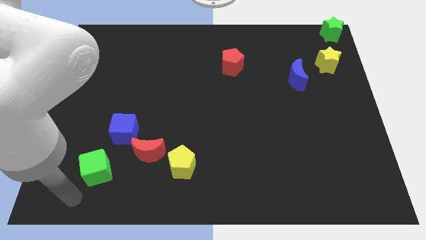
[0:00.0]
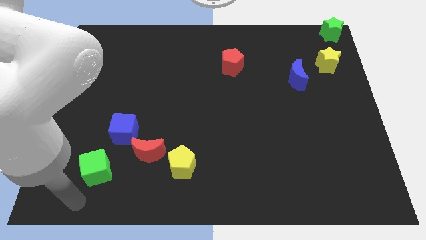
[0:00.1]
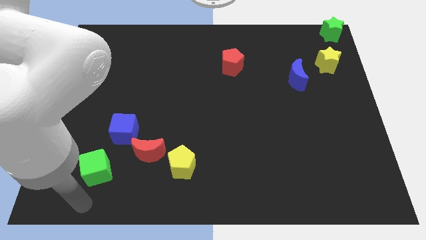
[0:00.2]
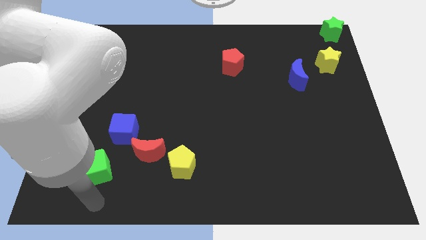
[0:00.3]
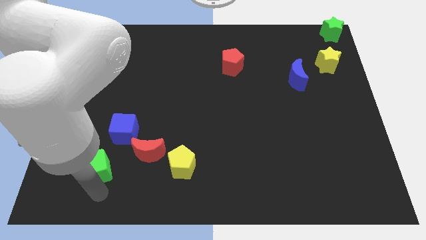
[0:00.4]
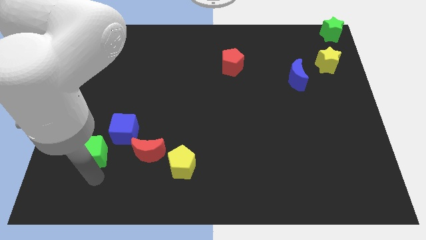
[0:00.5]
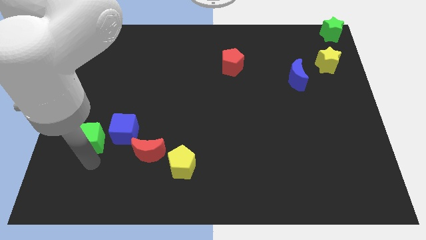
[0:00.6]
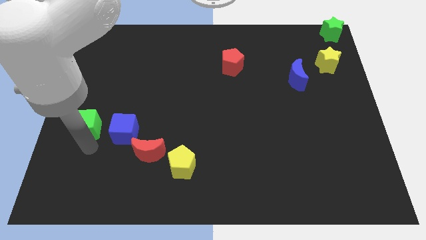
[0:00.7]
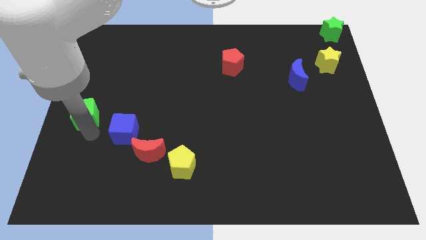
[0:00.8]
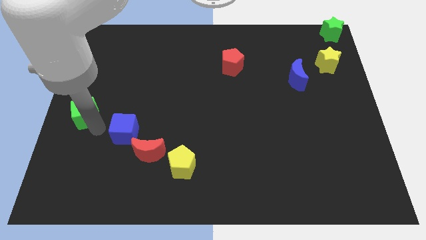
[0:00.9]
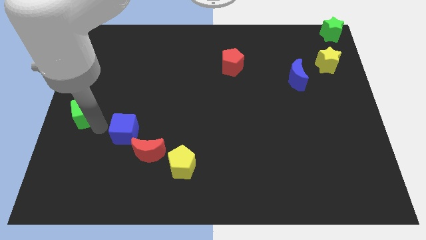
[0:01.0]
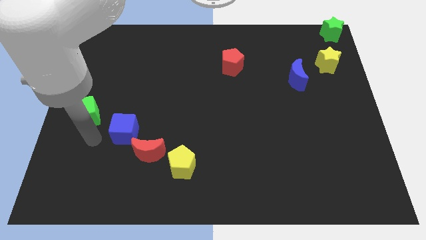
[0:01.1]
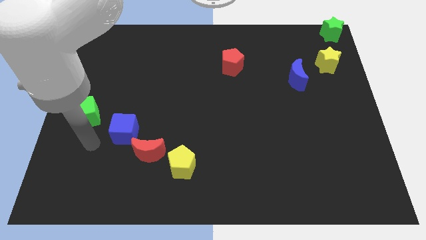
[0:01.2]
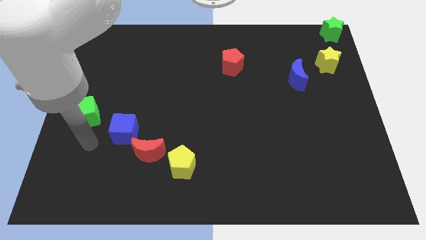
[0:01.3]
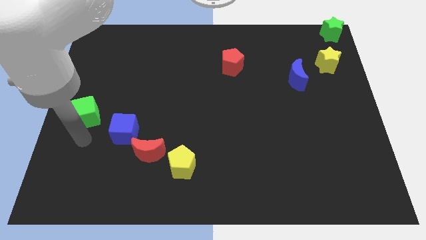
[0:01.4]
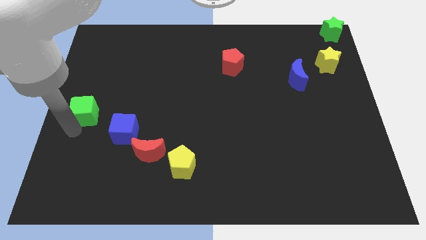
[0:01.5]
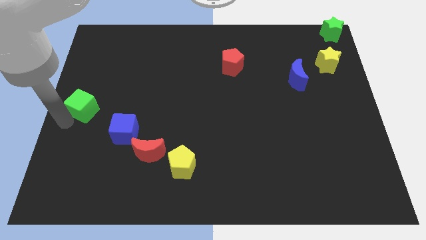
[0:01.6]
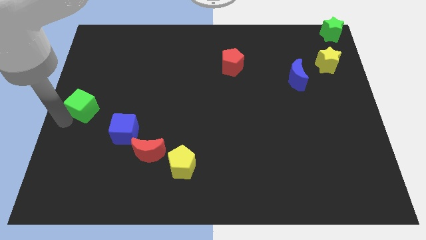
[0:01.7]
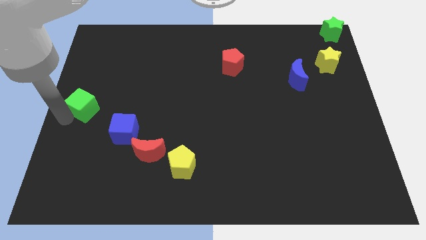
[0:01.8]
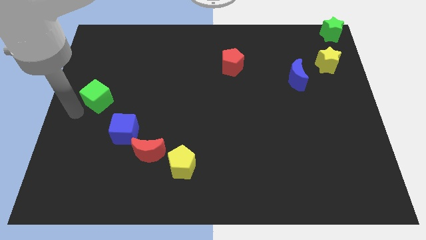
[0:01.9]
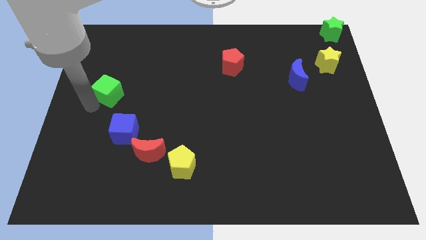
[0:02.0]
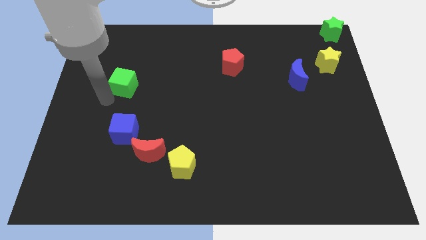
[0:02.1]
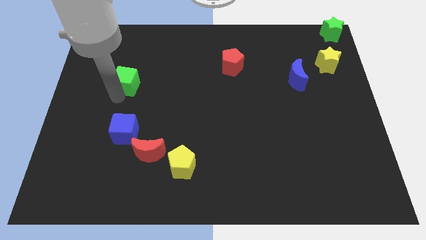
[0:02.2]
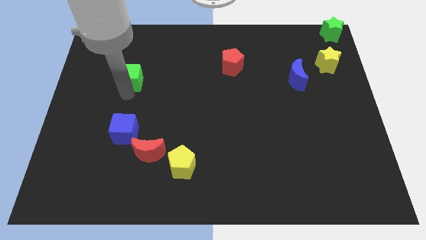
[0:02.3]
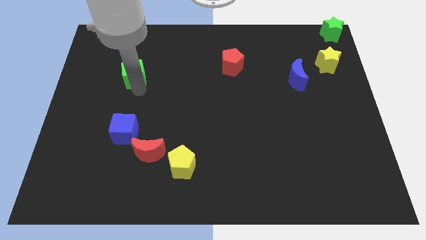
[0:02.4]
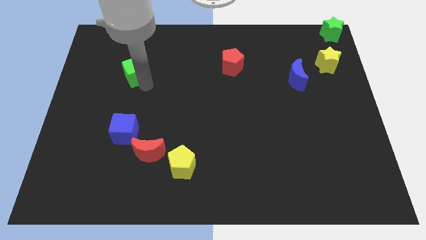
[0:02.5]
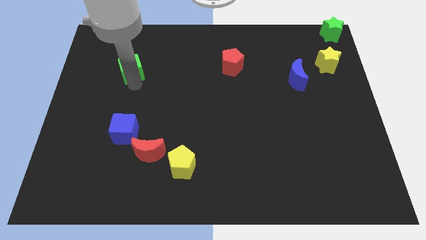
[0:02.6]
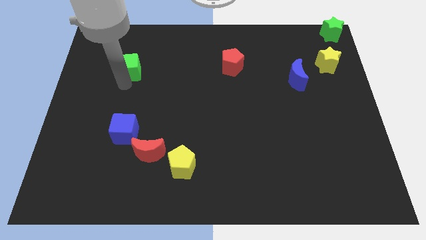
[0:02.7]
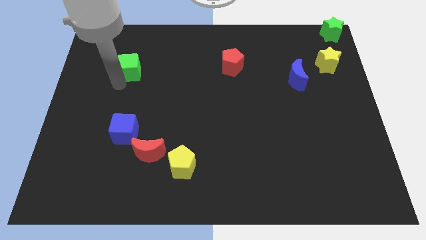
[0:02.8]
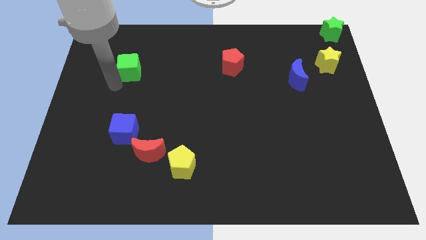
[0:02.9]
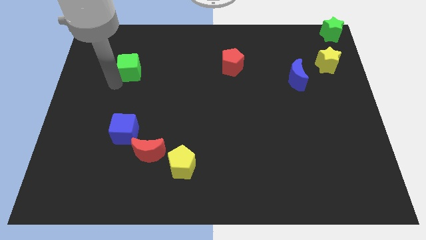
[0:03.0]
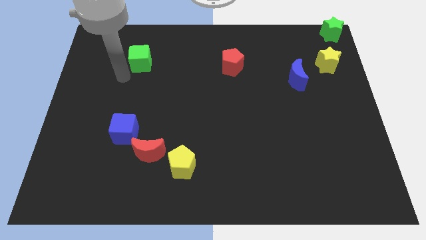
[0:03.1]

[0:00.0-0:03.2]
move the green cube parallel to the red pentagon

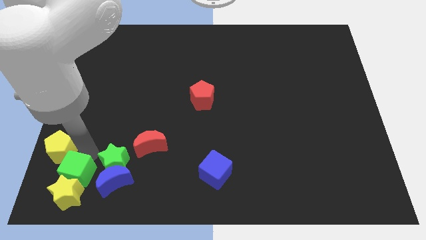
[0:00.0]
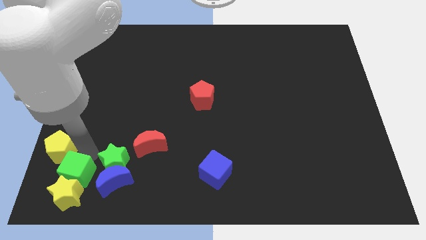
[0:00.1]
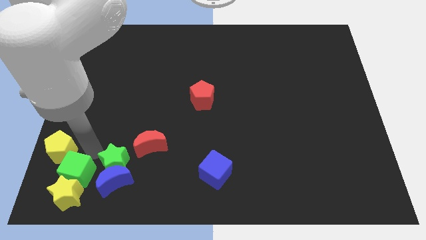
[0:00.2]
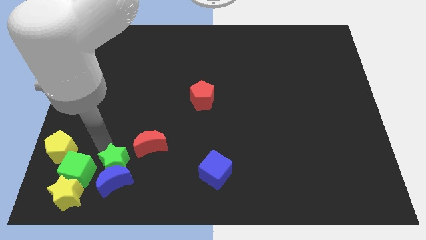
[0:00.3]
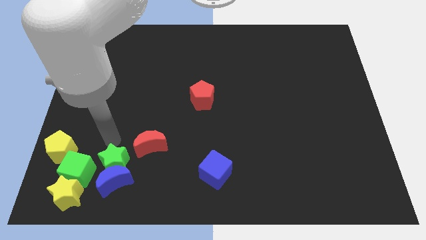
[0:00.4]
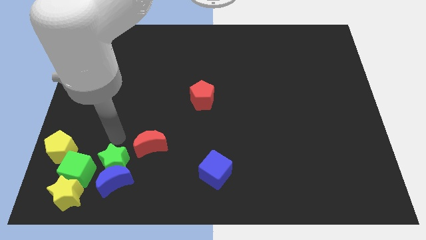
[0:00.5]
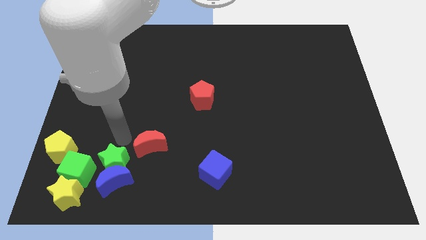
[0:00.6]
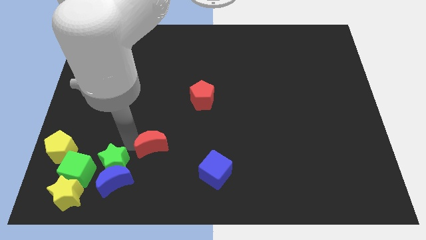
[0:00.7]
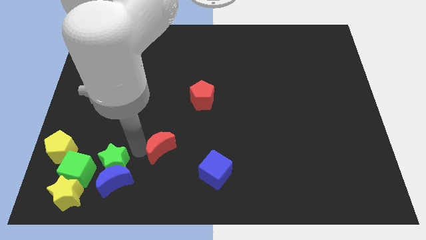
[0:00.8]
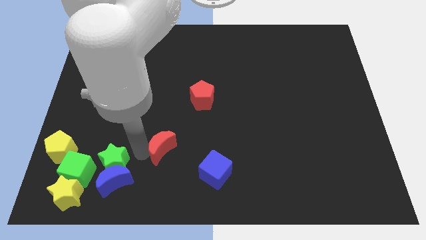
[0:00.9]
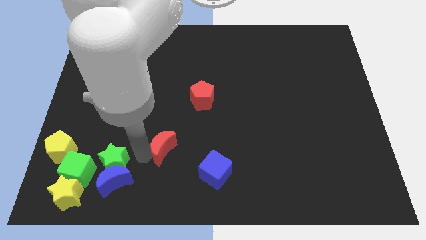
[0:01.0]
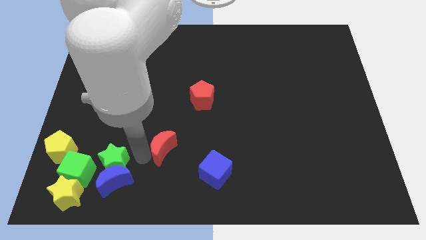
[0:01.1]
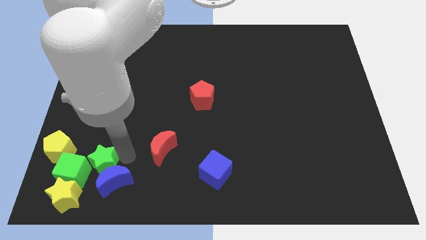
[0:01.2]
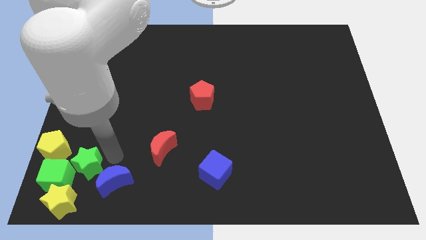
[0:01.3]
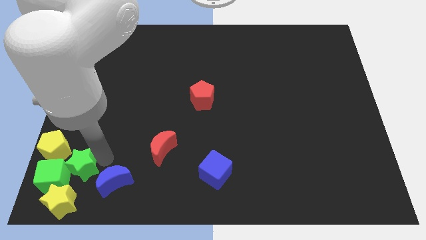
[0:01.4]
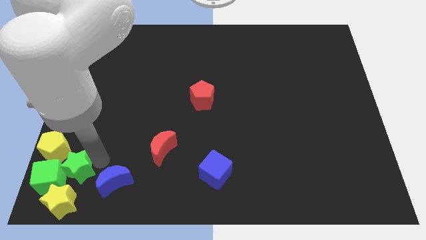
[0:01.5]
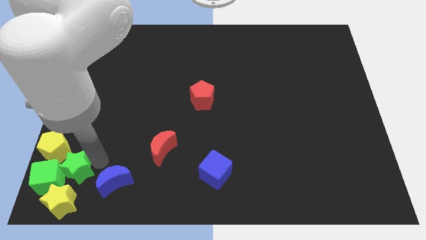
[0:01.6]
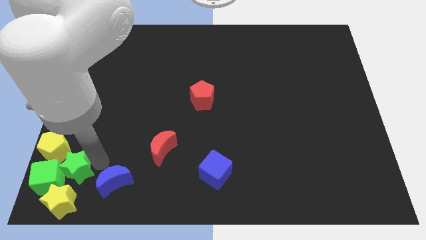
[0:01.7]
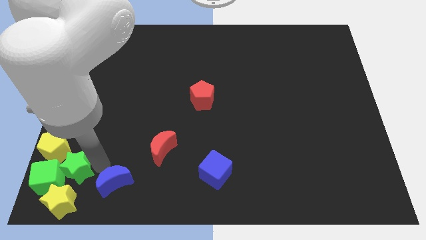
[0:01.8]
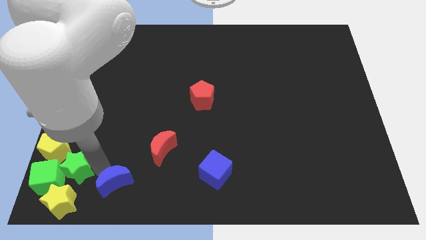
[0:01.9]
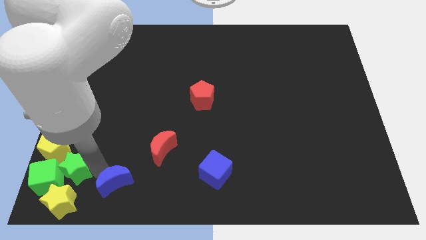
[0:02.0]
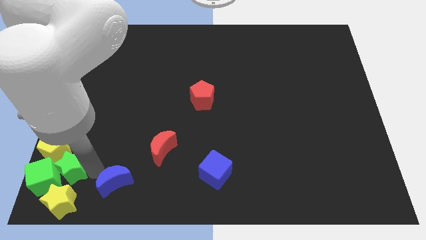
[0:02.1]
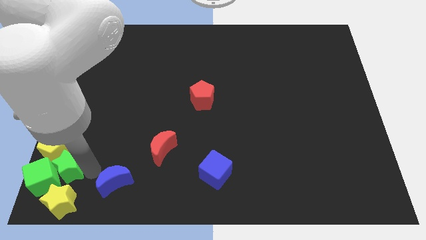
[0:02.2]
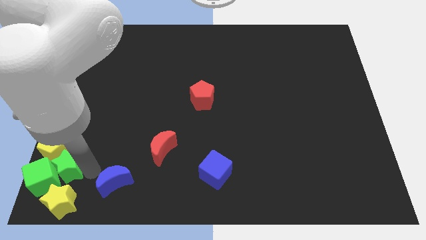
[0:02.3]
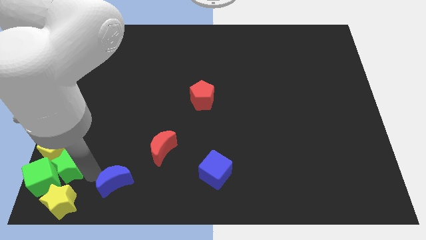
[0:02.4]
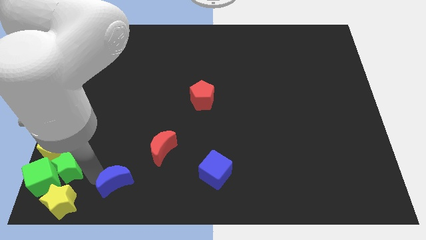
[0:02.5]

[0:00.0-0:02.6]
push green block with green star

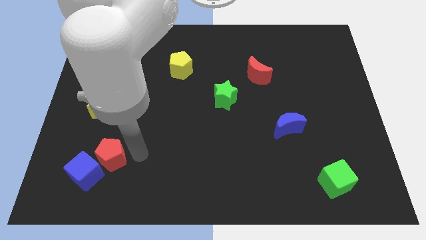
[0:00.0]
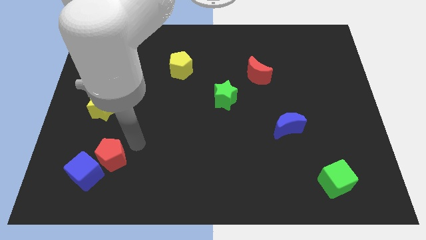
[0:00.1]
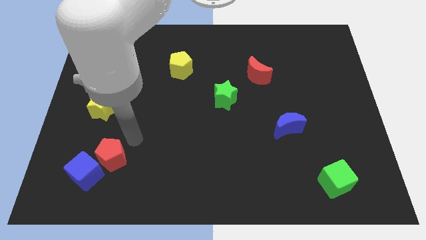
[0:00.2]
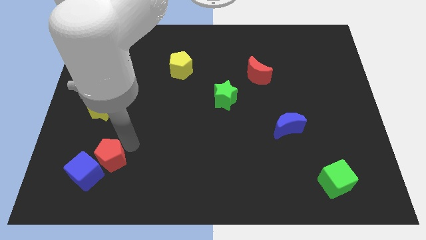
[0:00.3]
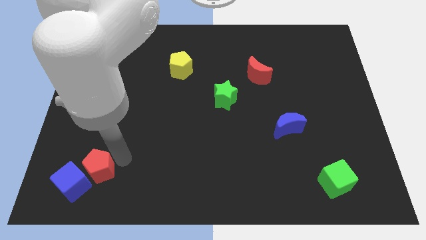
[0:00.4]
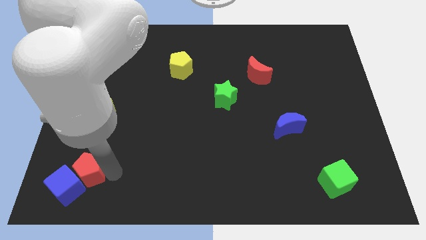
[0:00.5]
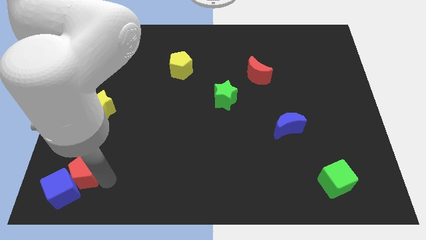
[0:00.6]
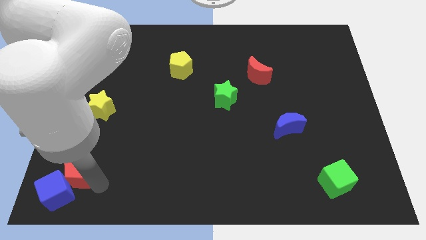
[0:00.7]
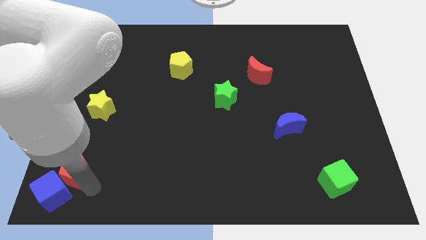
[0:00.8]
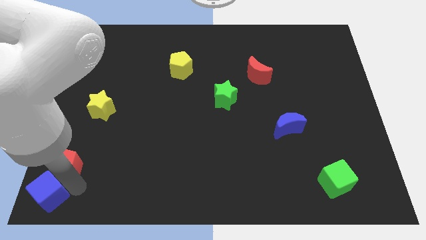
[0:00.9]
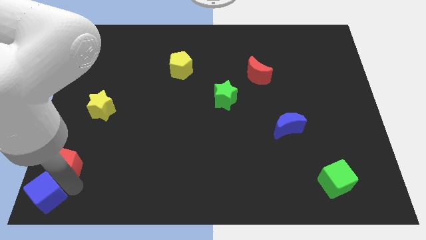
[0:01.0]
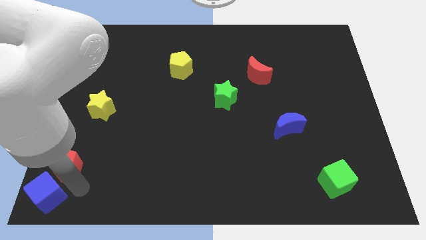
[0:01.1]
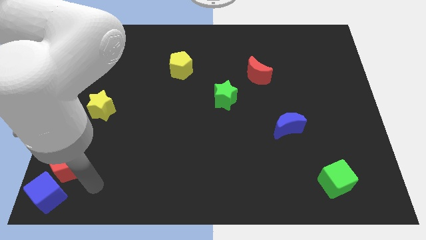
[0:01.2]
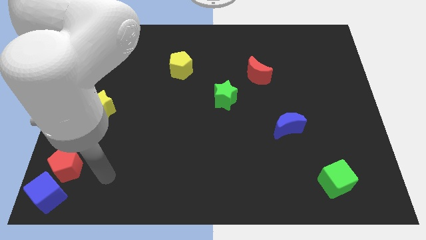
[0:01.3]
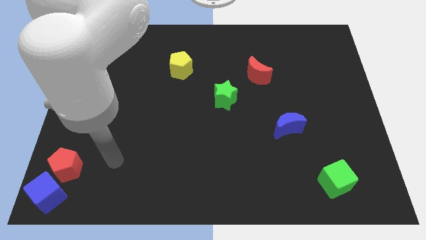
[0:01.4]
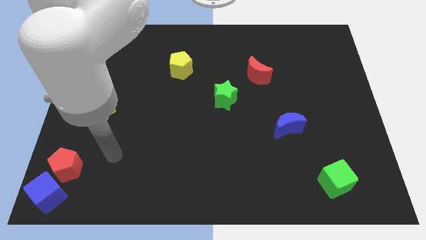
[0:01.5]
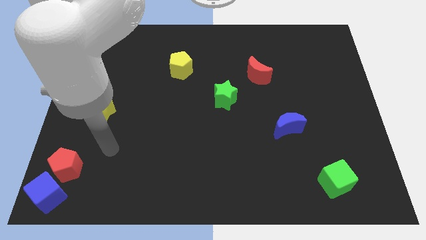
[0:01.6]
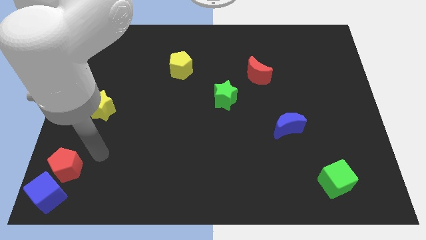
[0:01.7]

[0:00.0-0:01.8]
push the red pentagon with the blue cube to the left bottom

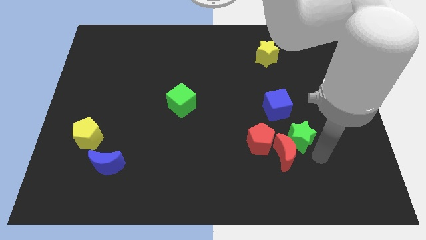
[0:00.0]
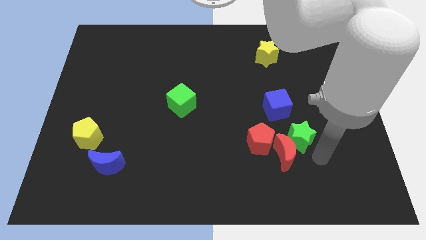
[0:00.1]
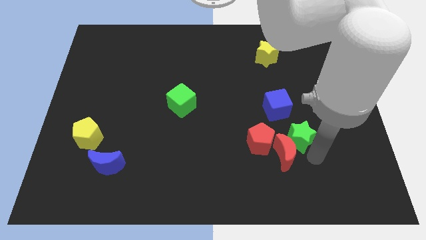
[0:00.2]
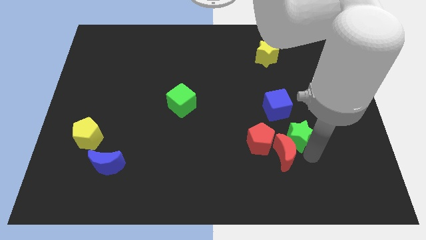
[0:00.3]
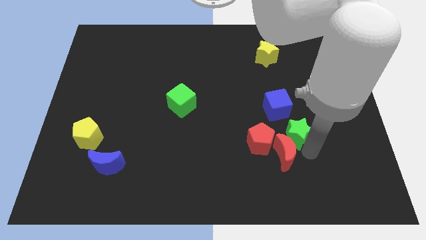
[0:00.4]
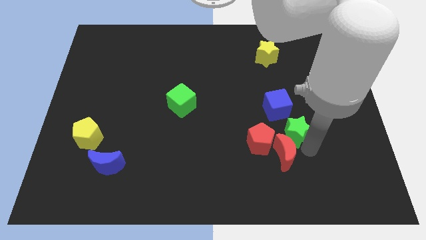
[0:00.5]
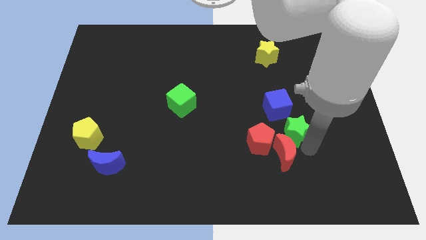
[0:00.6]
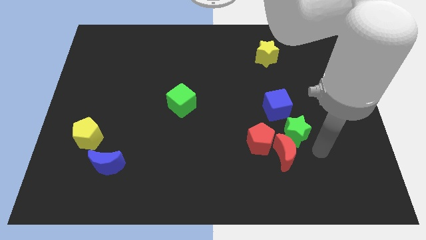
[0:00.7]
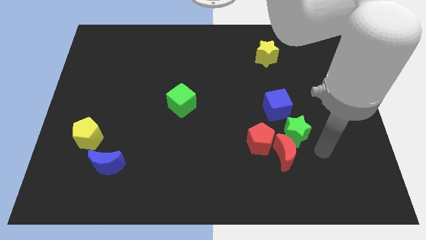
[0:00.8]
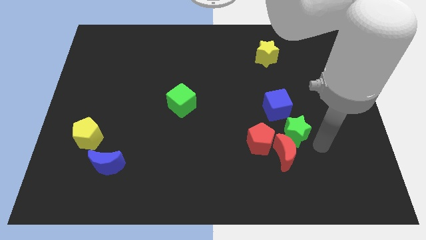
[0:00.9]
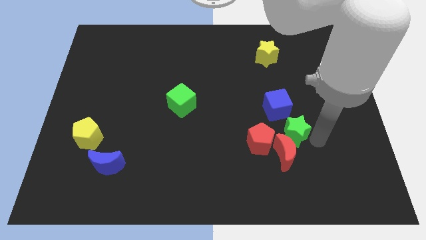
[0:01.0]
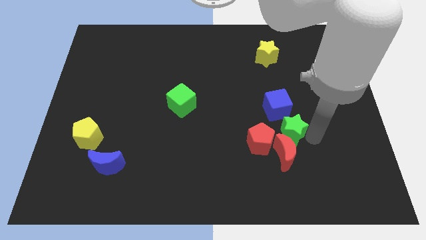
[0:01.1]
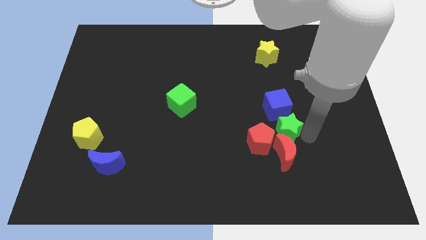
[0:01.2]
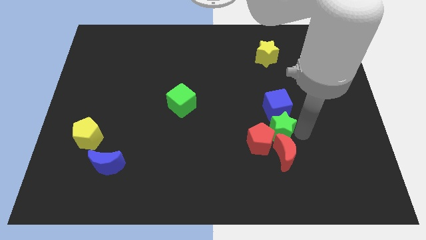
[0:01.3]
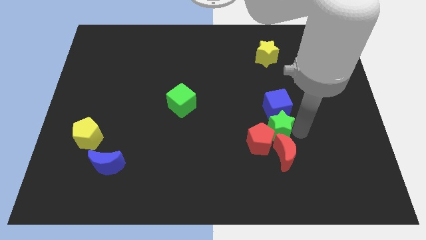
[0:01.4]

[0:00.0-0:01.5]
place the green star in between the blue cube and red crescent

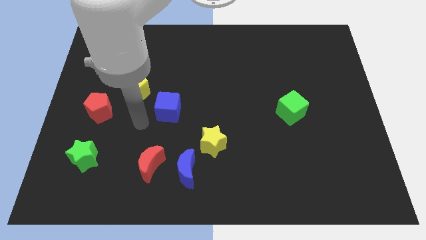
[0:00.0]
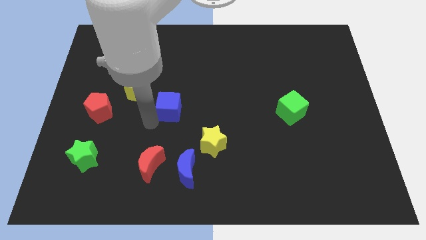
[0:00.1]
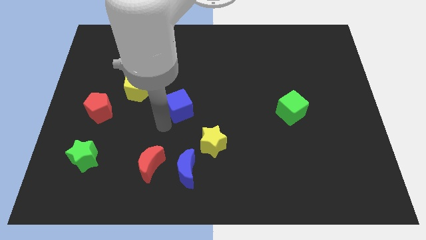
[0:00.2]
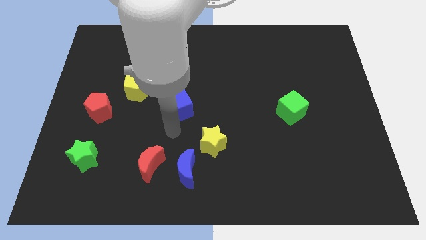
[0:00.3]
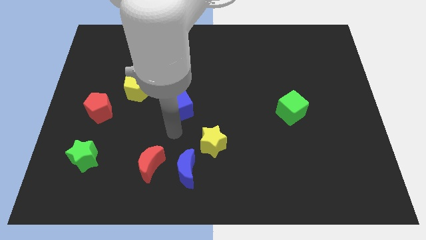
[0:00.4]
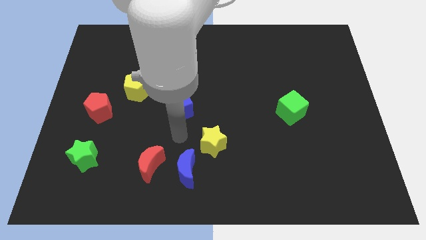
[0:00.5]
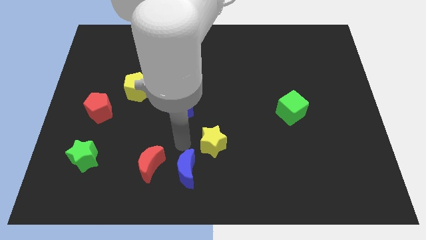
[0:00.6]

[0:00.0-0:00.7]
move your arm towards the top of the blue crescent
